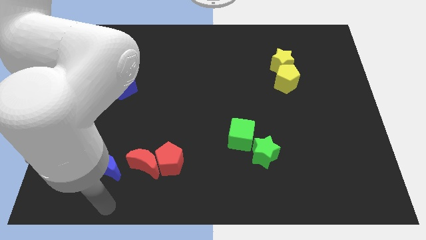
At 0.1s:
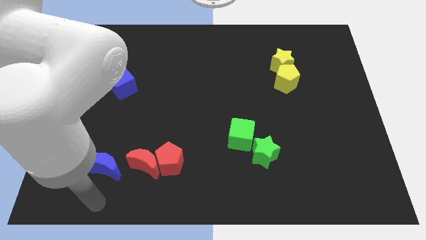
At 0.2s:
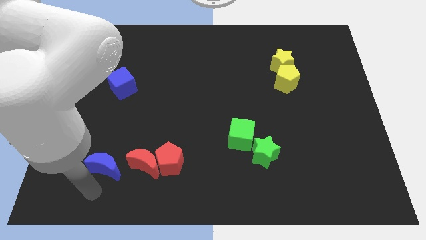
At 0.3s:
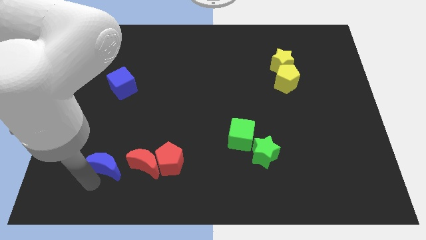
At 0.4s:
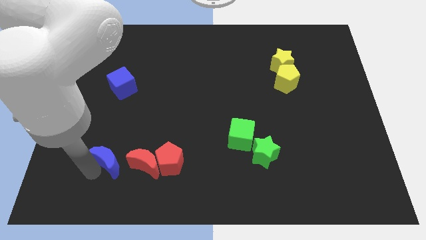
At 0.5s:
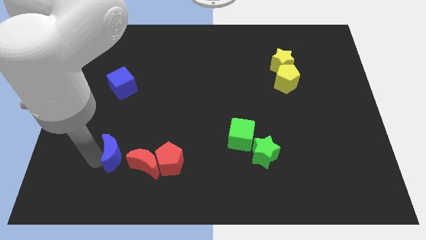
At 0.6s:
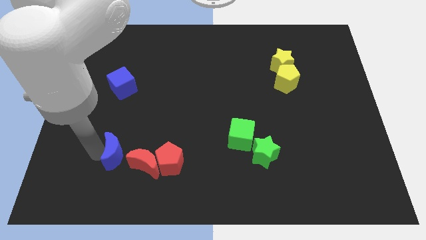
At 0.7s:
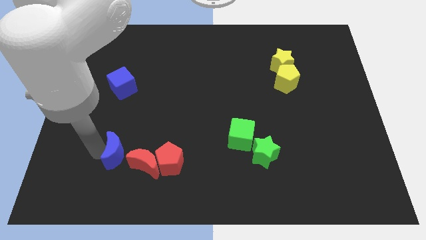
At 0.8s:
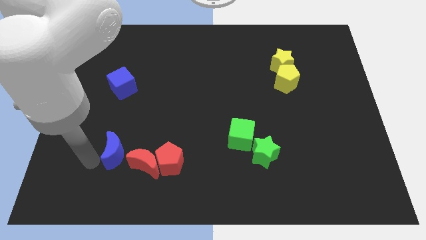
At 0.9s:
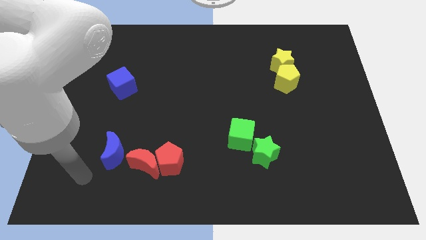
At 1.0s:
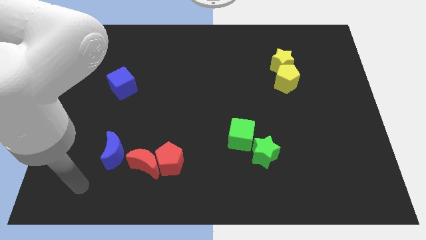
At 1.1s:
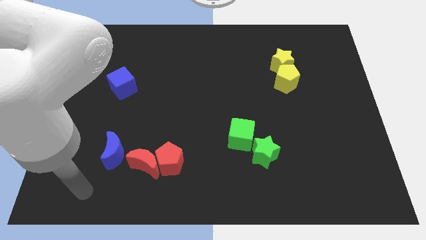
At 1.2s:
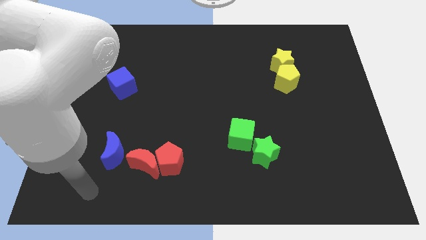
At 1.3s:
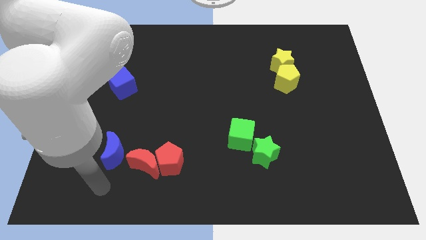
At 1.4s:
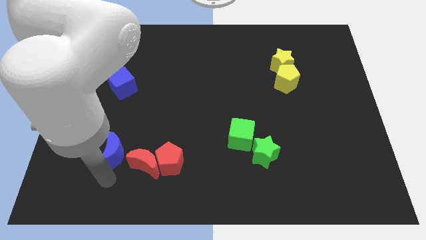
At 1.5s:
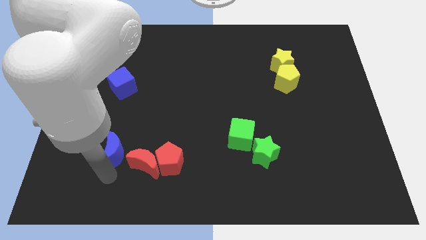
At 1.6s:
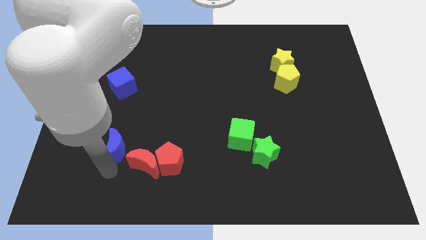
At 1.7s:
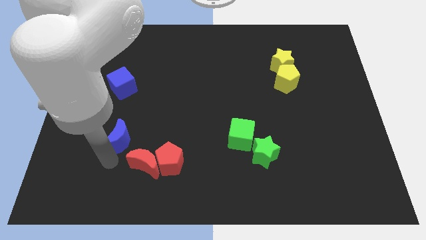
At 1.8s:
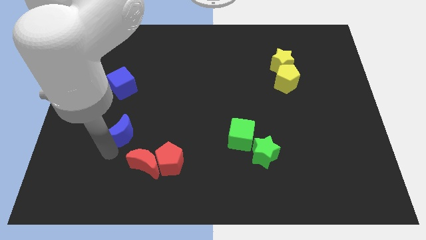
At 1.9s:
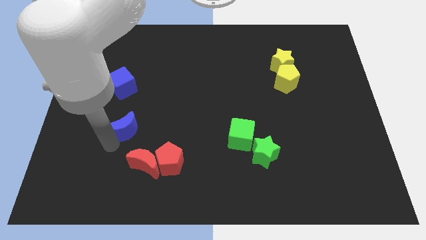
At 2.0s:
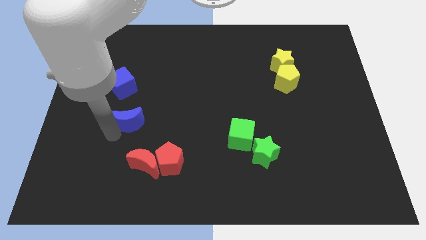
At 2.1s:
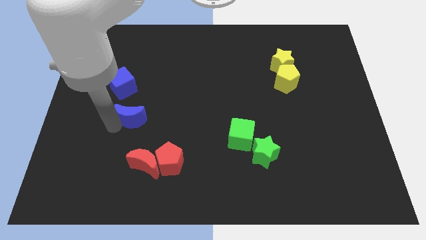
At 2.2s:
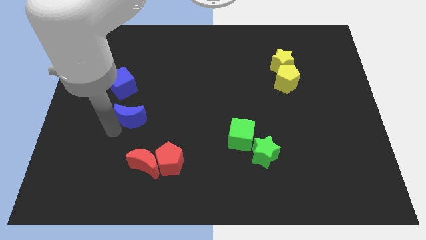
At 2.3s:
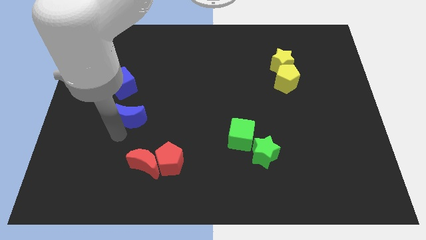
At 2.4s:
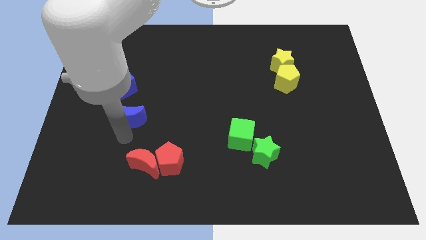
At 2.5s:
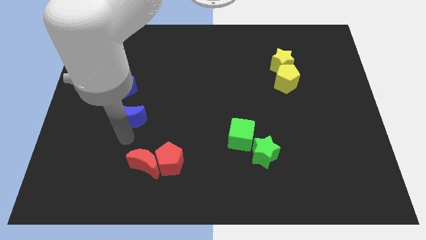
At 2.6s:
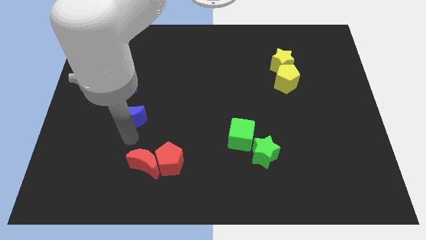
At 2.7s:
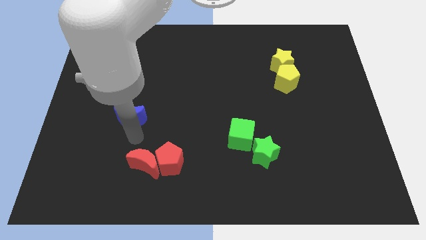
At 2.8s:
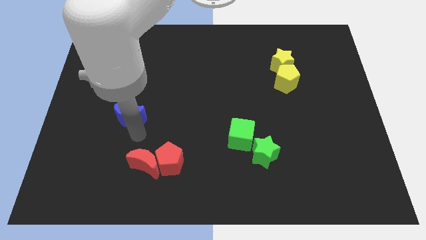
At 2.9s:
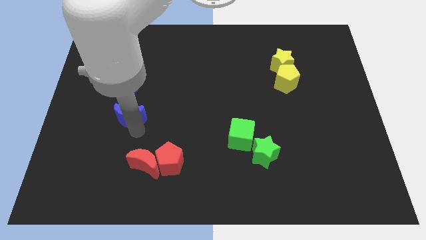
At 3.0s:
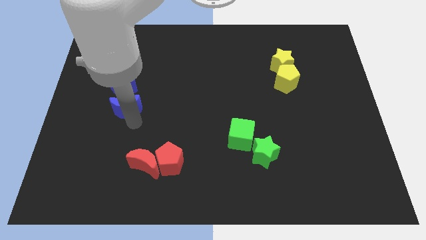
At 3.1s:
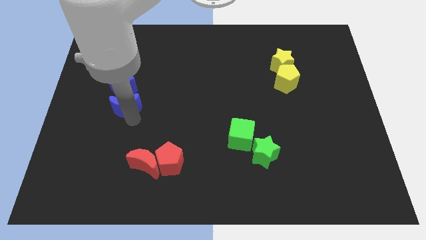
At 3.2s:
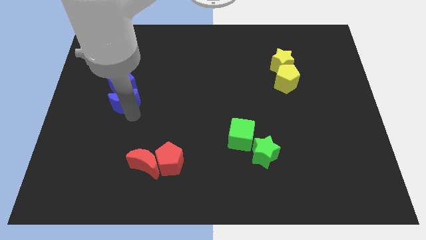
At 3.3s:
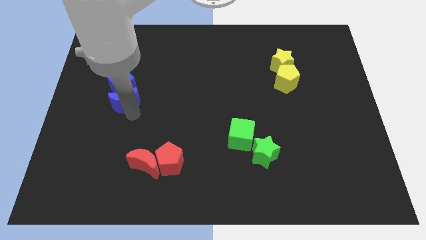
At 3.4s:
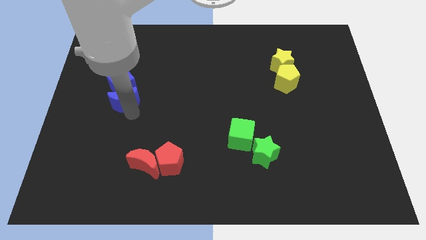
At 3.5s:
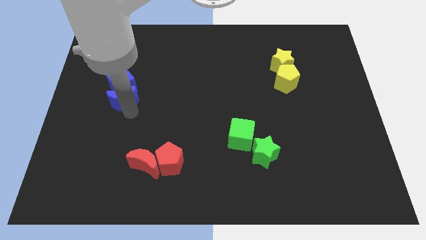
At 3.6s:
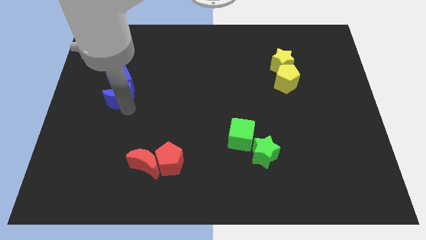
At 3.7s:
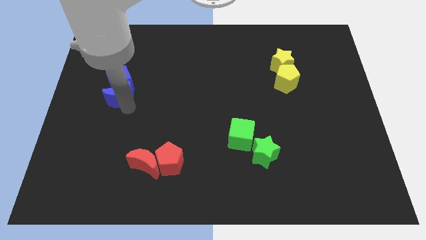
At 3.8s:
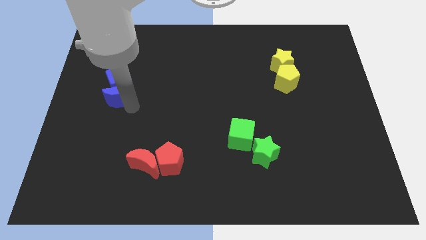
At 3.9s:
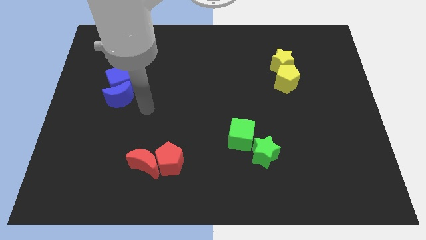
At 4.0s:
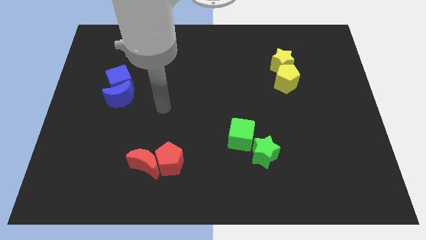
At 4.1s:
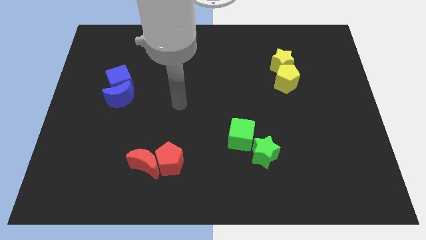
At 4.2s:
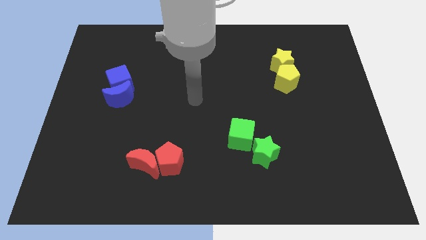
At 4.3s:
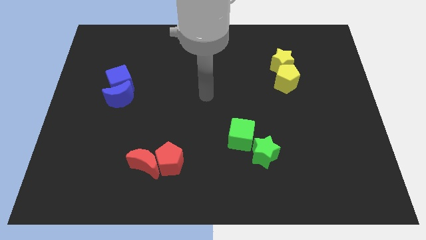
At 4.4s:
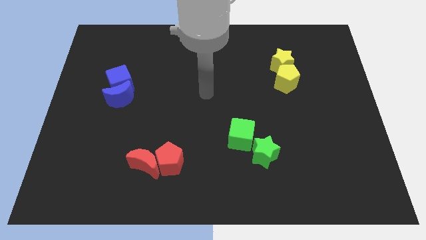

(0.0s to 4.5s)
push the blue crescent below to the blue cube

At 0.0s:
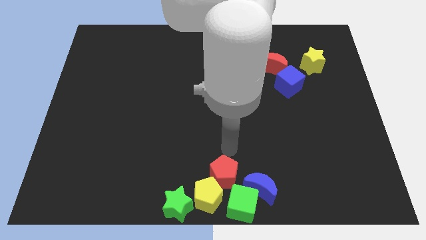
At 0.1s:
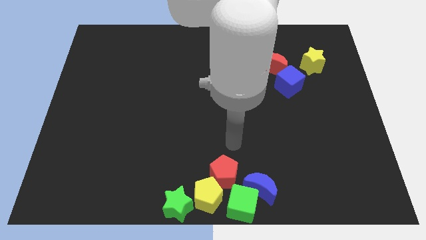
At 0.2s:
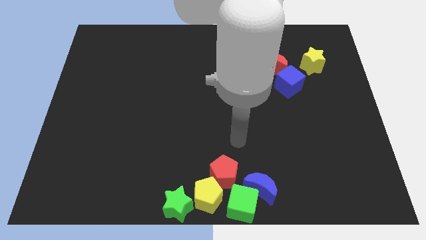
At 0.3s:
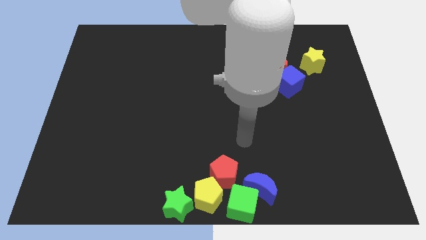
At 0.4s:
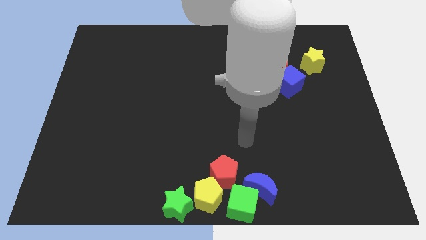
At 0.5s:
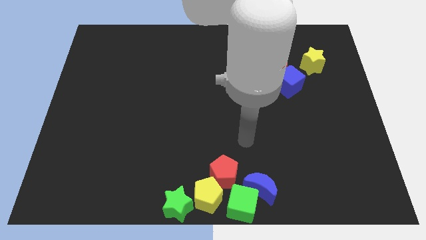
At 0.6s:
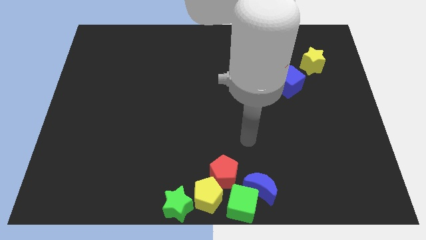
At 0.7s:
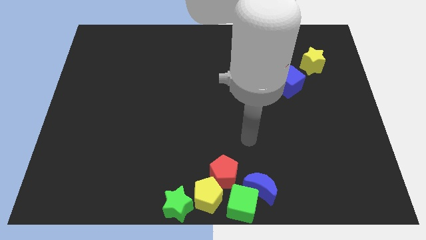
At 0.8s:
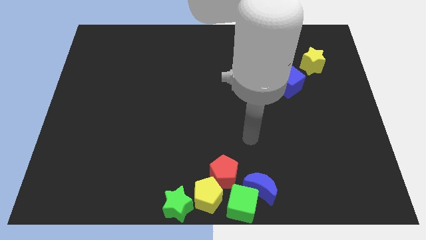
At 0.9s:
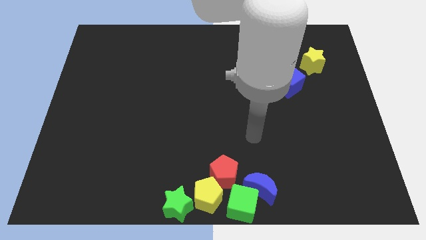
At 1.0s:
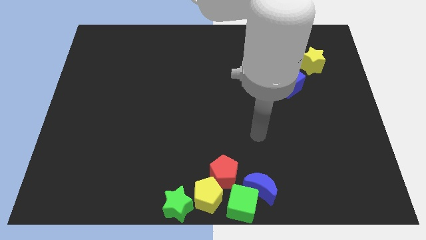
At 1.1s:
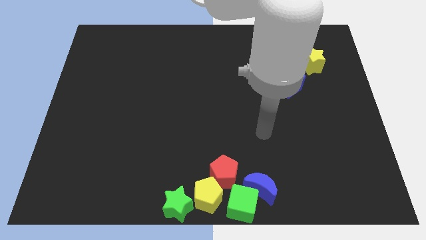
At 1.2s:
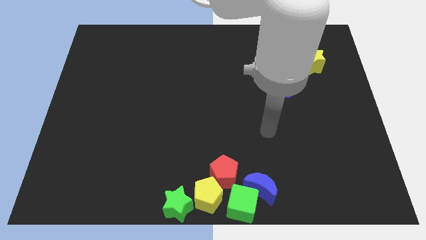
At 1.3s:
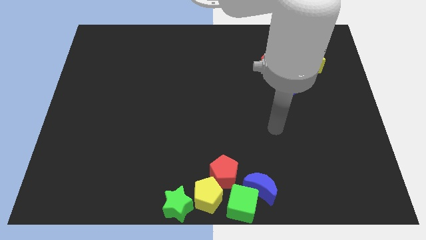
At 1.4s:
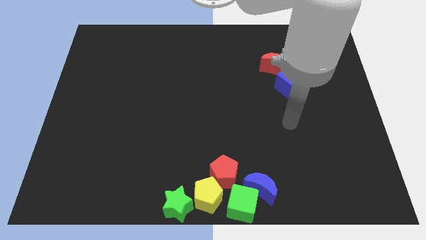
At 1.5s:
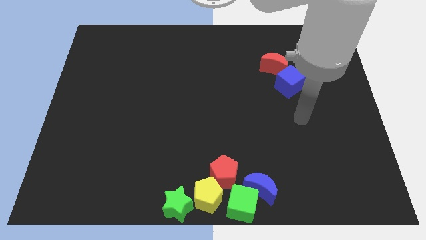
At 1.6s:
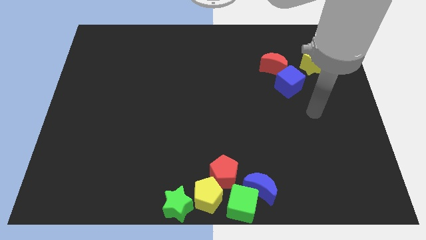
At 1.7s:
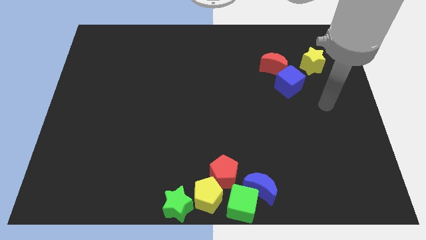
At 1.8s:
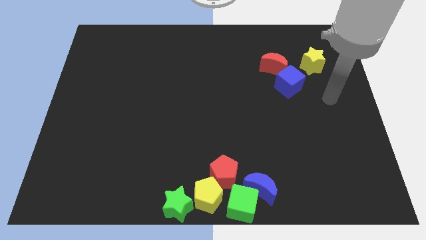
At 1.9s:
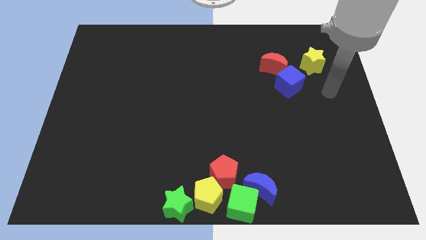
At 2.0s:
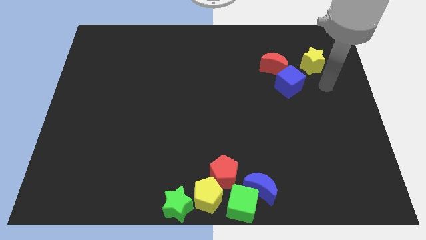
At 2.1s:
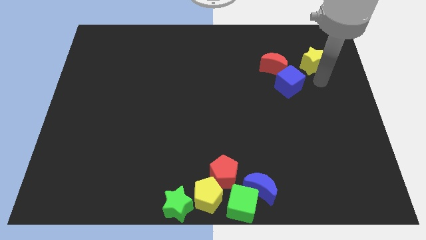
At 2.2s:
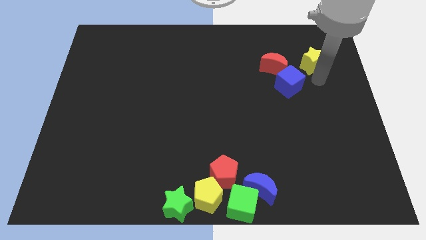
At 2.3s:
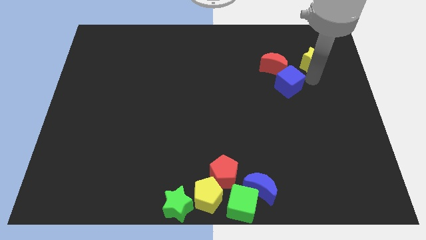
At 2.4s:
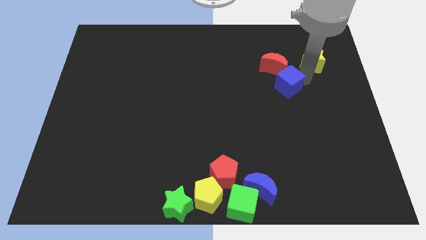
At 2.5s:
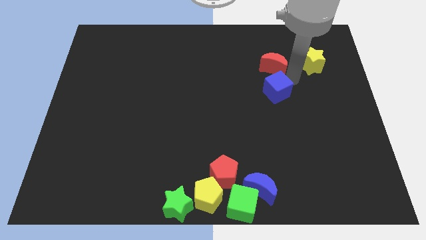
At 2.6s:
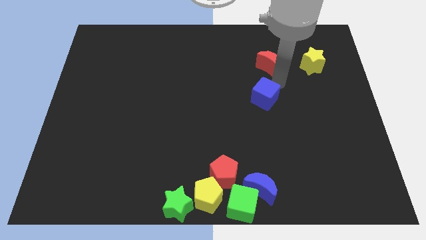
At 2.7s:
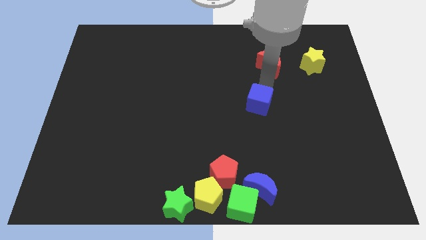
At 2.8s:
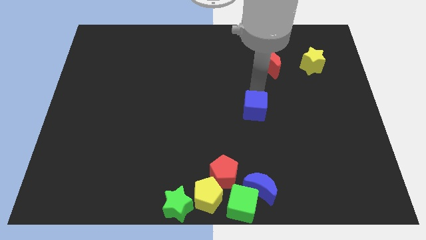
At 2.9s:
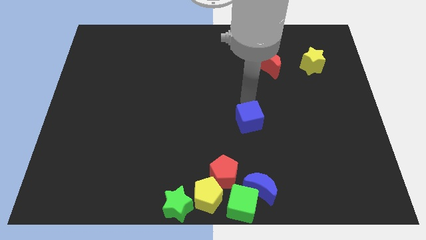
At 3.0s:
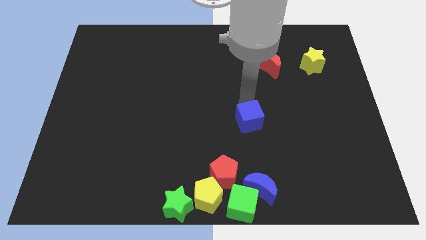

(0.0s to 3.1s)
separate the blue cube from the red moon

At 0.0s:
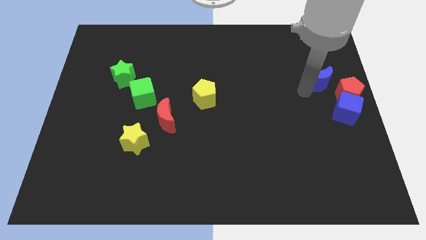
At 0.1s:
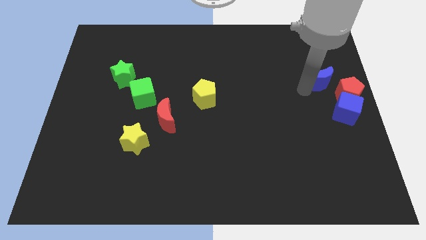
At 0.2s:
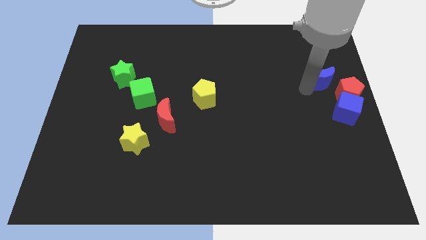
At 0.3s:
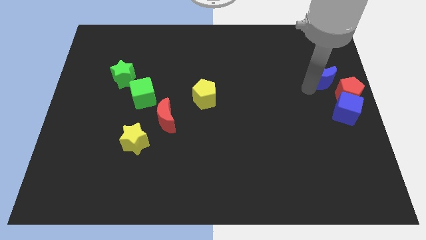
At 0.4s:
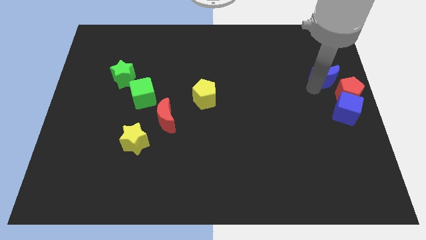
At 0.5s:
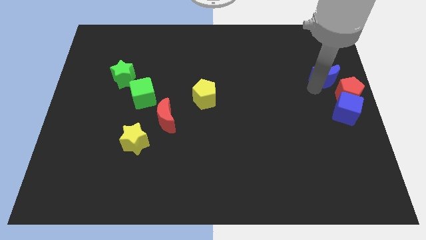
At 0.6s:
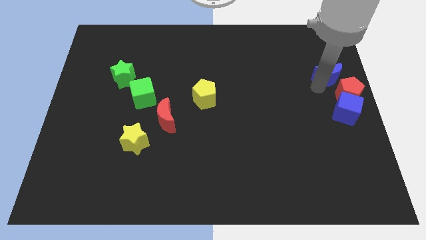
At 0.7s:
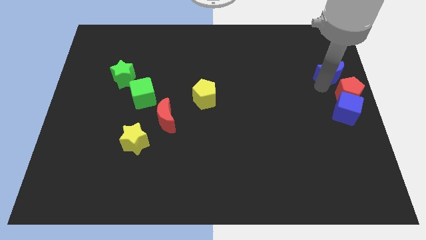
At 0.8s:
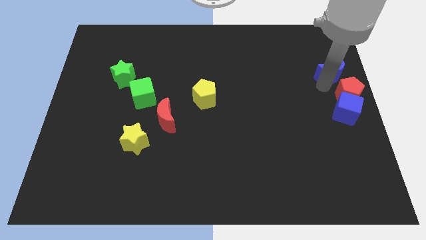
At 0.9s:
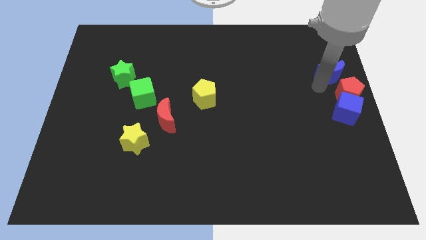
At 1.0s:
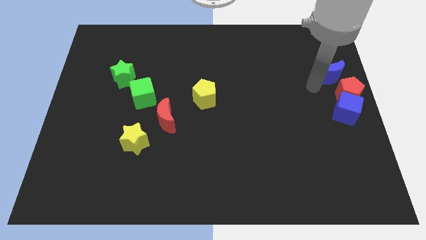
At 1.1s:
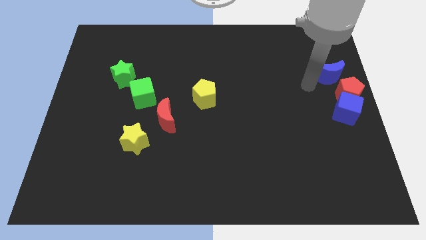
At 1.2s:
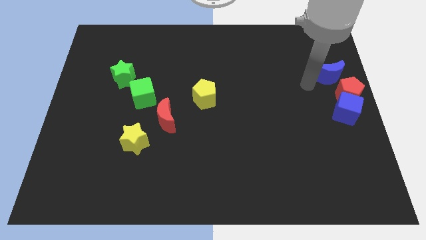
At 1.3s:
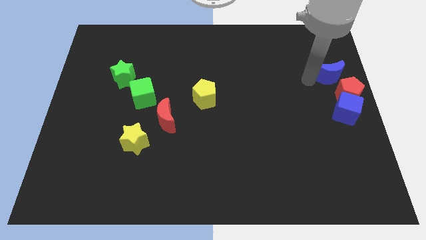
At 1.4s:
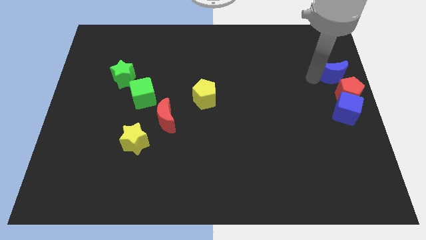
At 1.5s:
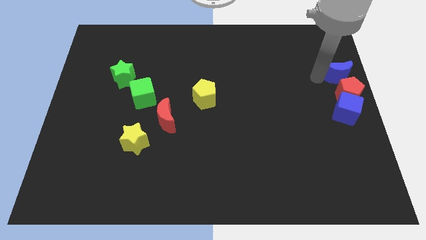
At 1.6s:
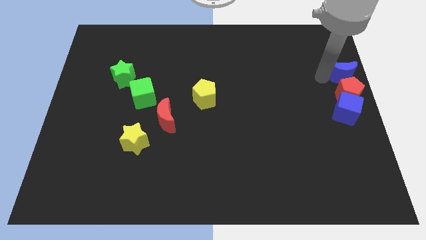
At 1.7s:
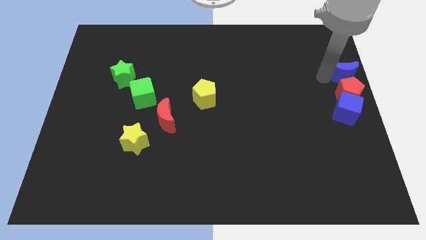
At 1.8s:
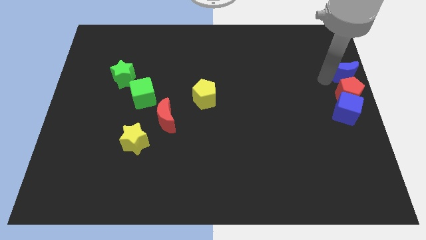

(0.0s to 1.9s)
place the blue crescent above the red pentagon
